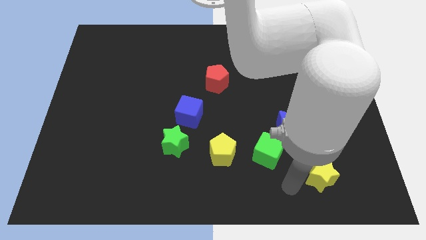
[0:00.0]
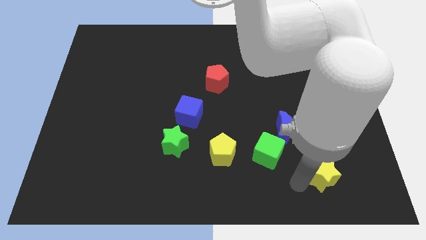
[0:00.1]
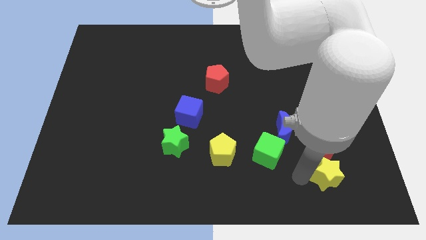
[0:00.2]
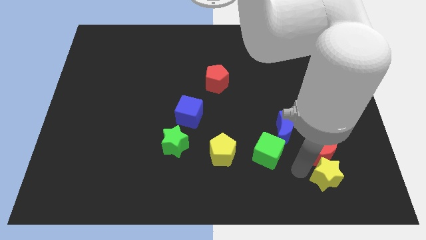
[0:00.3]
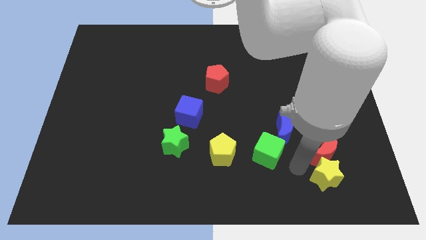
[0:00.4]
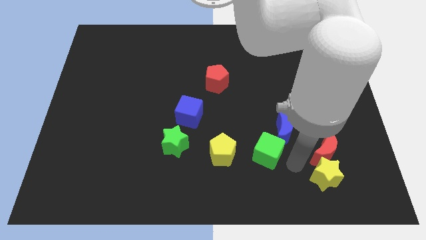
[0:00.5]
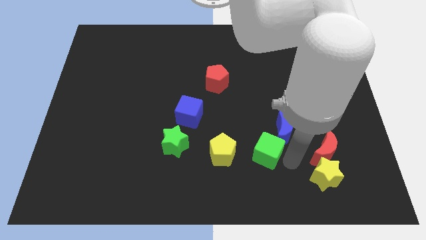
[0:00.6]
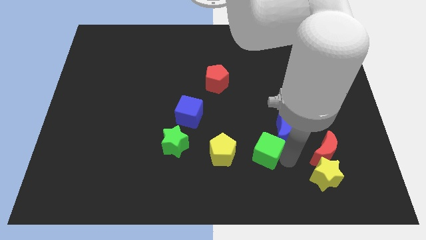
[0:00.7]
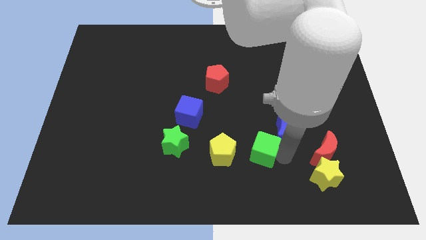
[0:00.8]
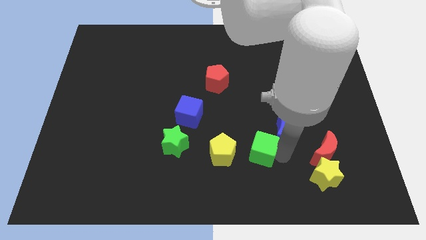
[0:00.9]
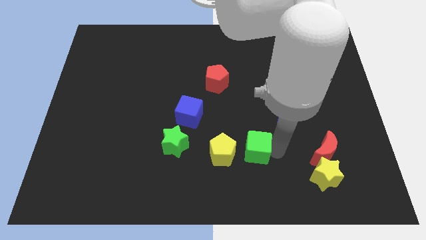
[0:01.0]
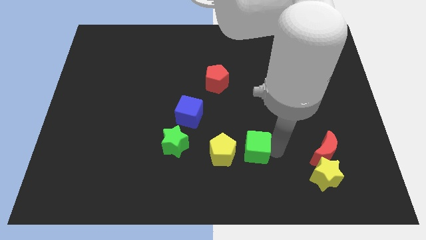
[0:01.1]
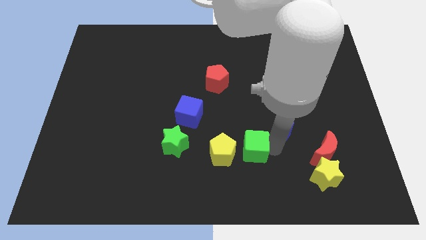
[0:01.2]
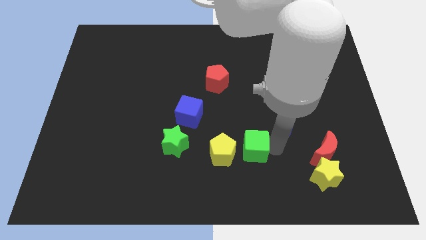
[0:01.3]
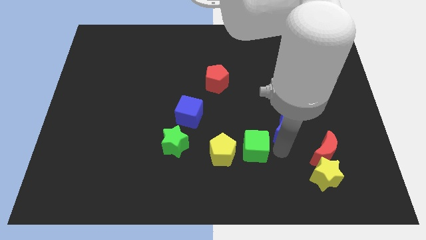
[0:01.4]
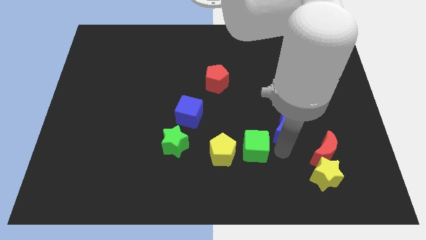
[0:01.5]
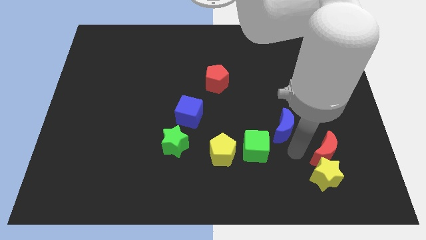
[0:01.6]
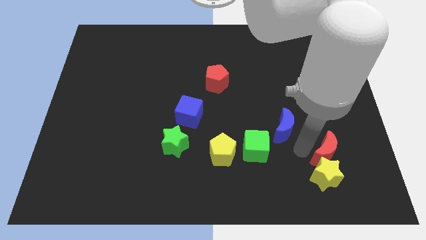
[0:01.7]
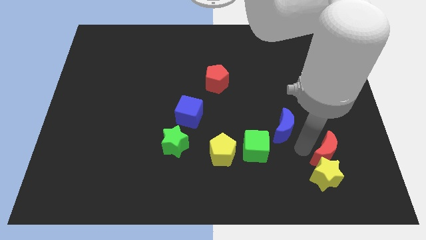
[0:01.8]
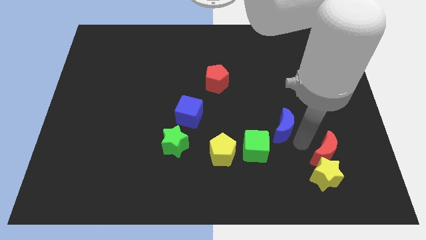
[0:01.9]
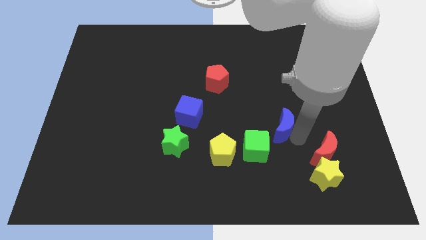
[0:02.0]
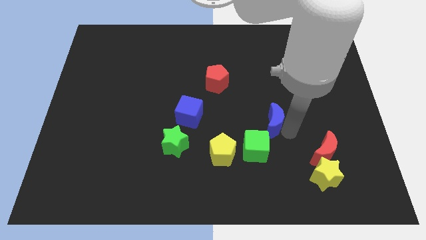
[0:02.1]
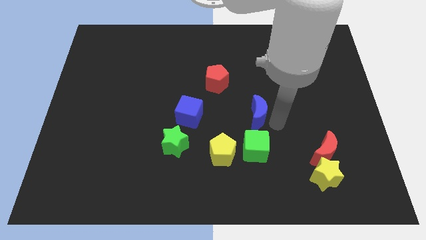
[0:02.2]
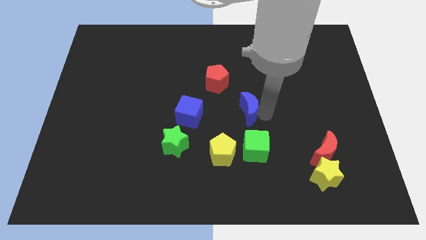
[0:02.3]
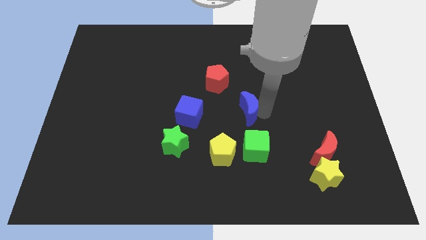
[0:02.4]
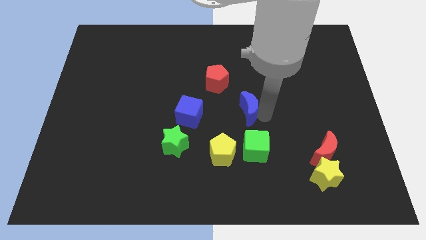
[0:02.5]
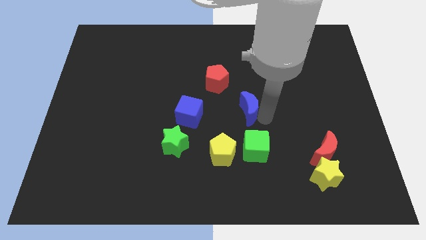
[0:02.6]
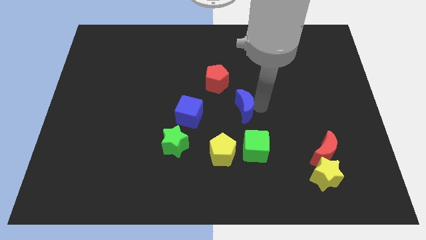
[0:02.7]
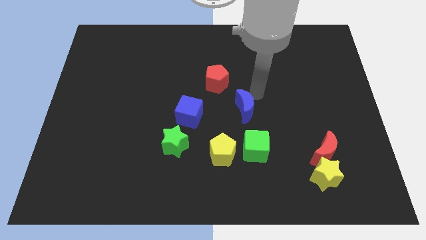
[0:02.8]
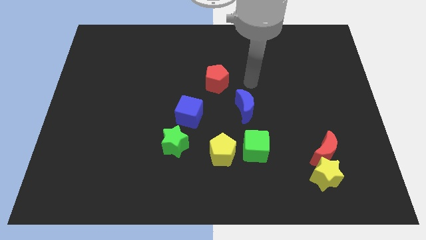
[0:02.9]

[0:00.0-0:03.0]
move the blue crescent towards the center of the board

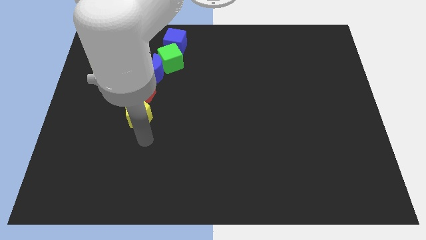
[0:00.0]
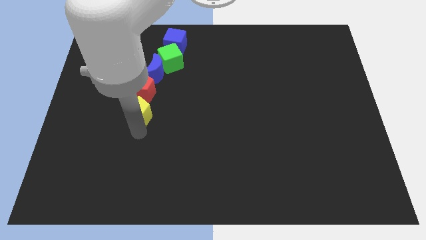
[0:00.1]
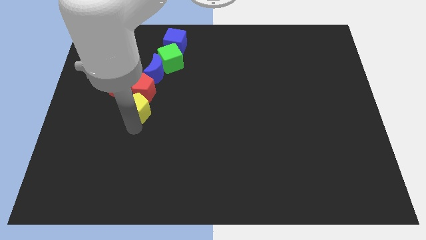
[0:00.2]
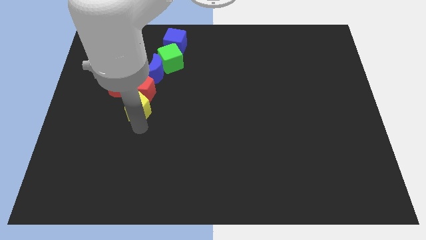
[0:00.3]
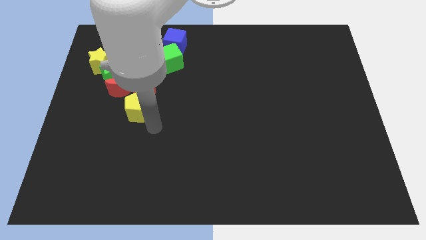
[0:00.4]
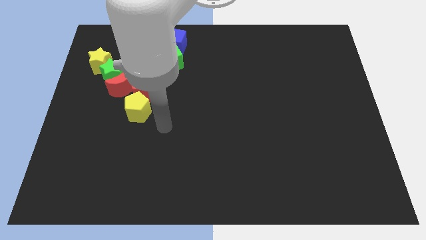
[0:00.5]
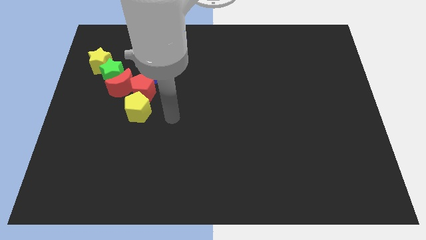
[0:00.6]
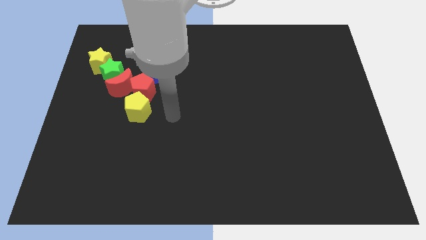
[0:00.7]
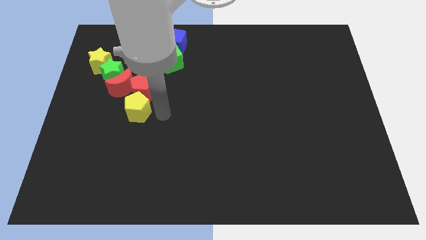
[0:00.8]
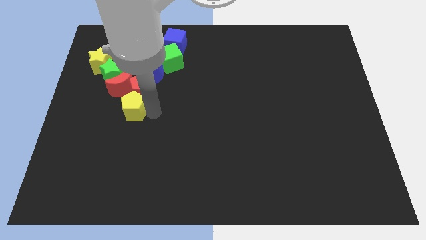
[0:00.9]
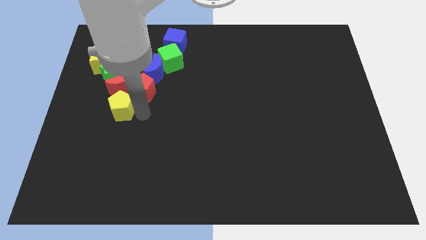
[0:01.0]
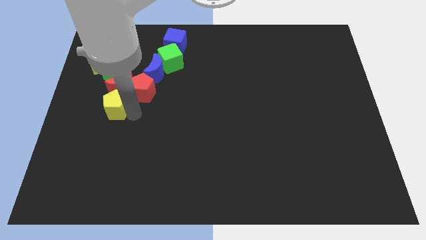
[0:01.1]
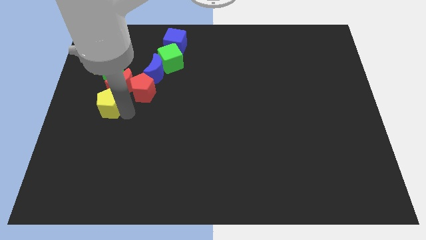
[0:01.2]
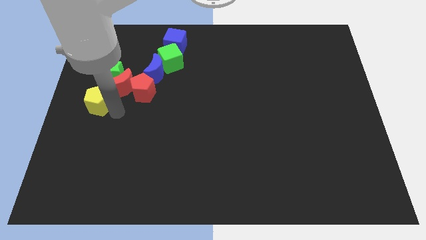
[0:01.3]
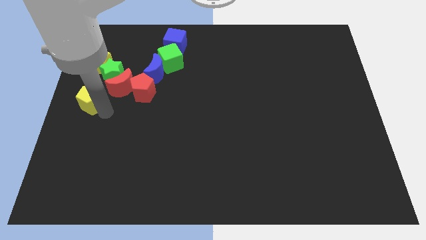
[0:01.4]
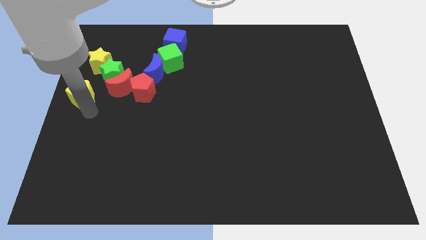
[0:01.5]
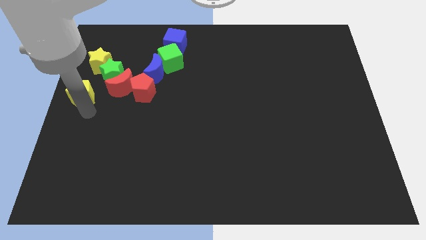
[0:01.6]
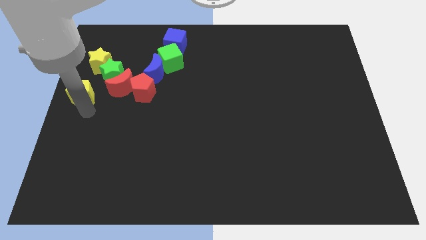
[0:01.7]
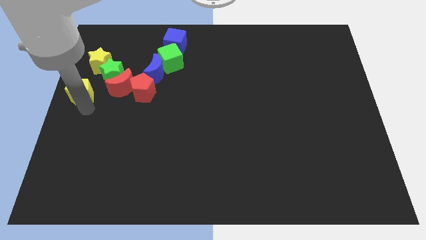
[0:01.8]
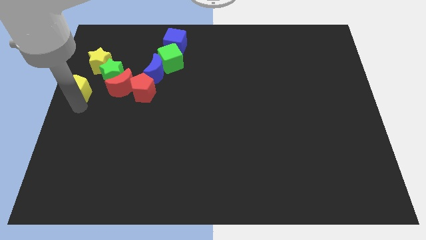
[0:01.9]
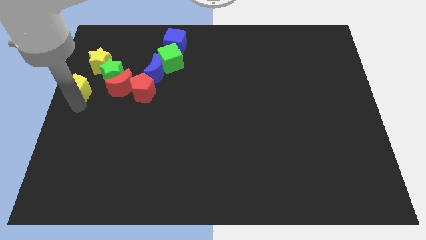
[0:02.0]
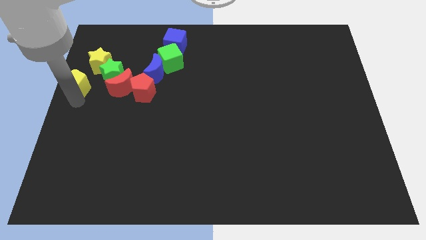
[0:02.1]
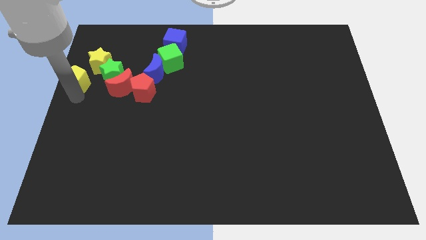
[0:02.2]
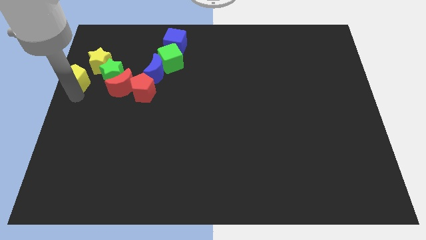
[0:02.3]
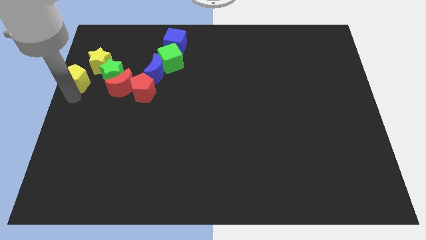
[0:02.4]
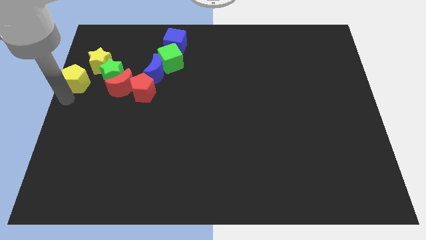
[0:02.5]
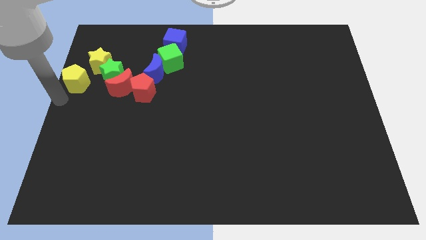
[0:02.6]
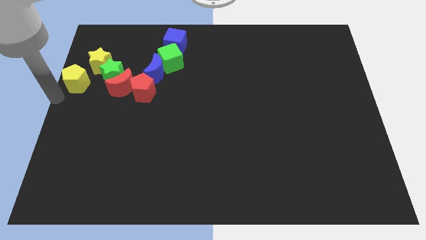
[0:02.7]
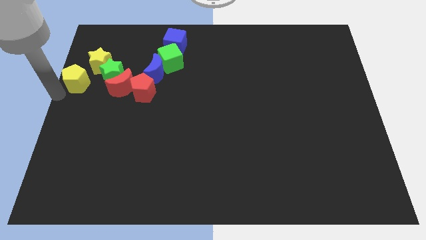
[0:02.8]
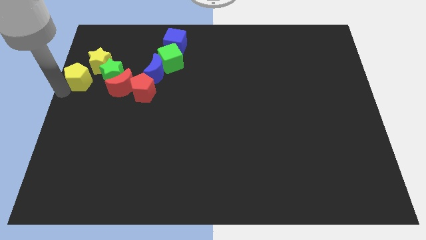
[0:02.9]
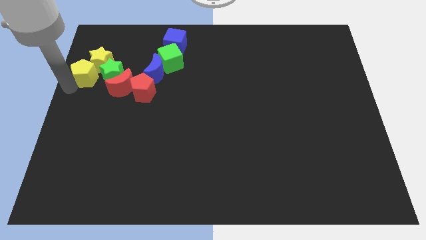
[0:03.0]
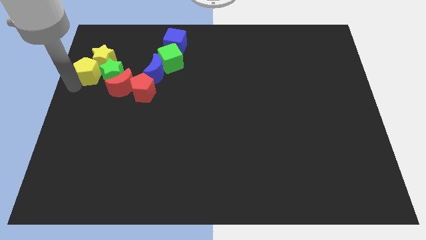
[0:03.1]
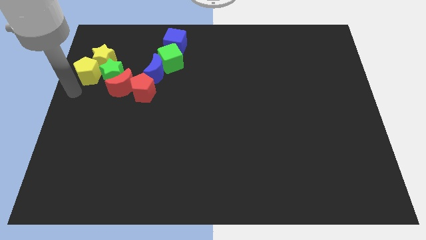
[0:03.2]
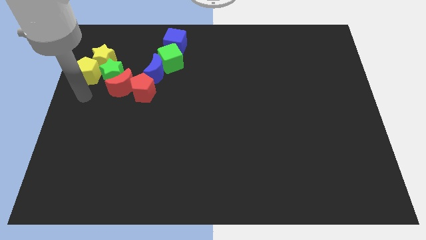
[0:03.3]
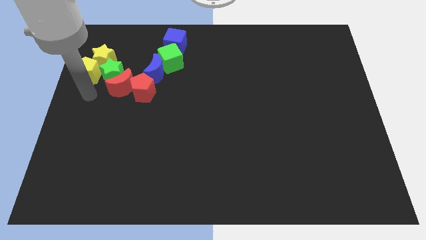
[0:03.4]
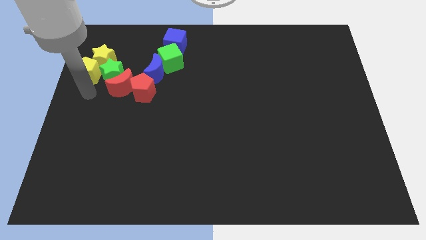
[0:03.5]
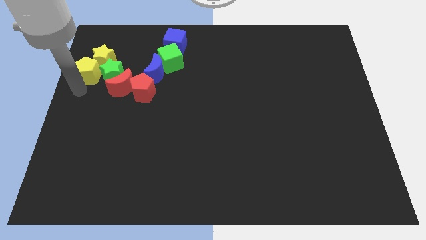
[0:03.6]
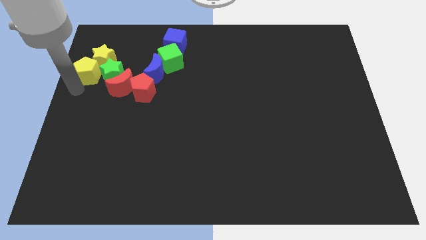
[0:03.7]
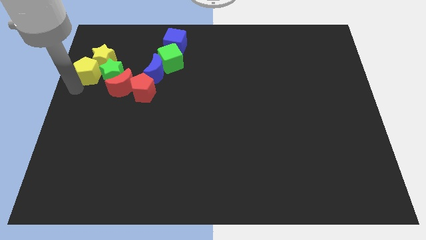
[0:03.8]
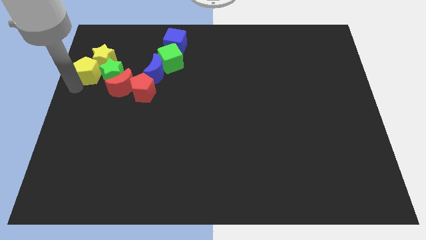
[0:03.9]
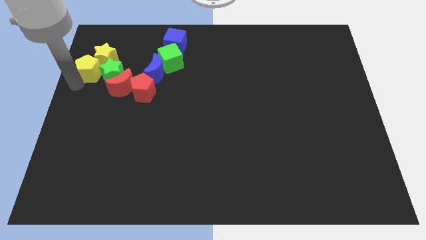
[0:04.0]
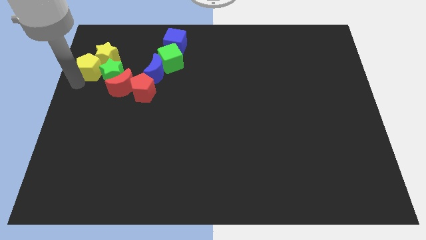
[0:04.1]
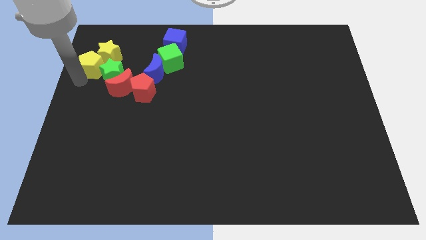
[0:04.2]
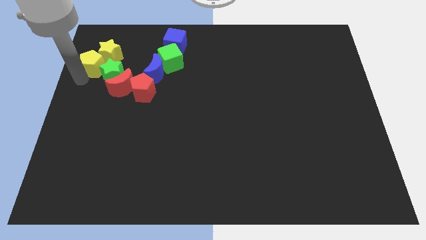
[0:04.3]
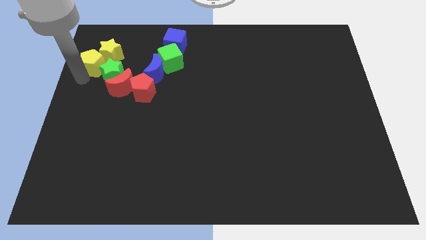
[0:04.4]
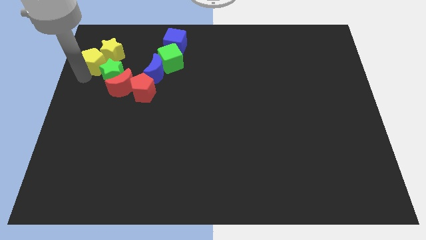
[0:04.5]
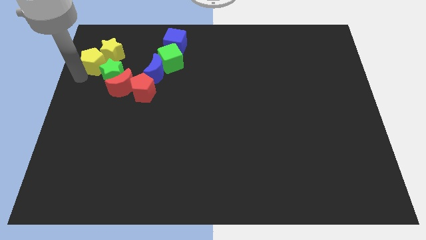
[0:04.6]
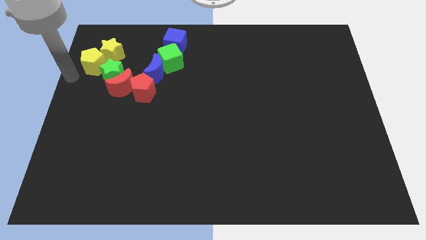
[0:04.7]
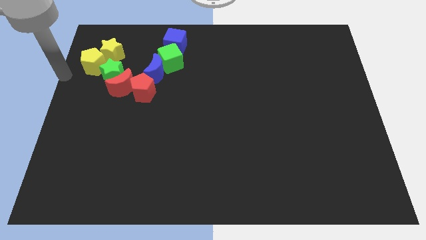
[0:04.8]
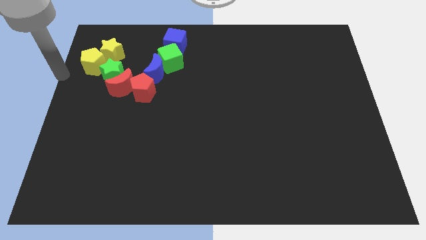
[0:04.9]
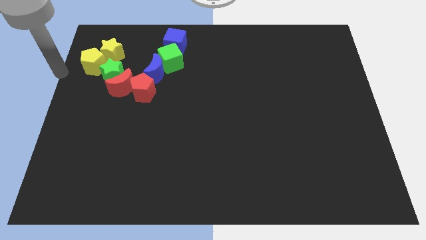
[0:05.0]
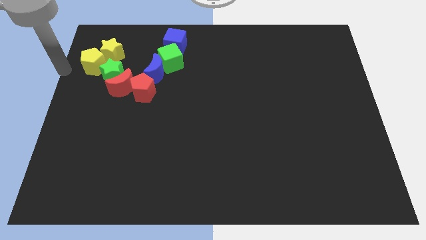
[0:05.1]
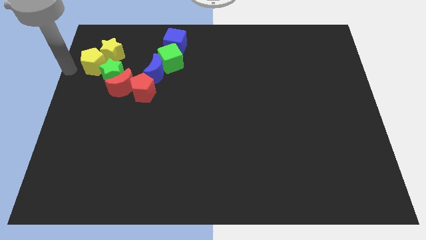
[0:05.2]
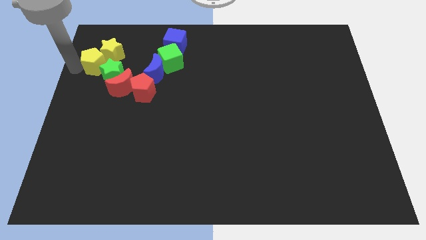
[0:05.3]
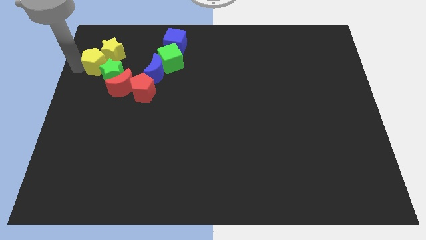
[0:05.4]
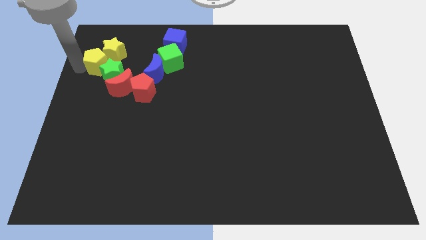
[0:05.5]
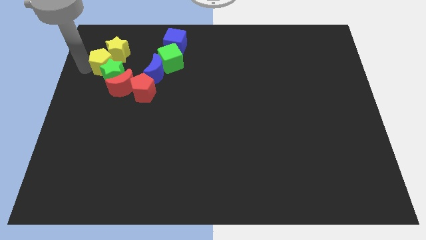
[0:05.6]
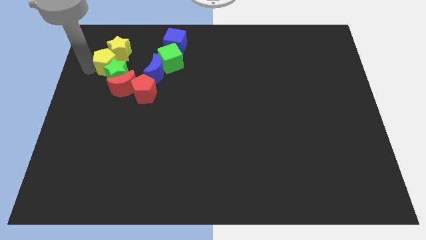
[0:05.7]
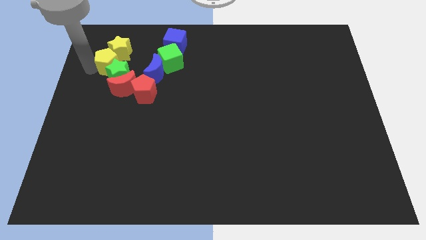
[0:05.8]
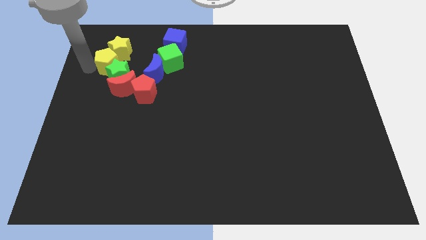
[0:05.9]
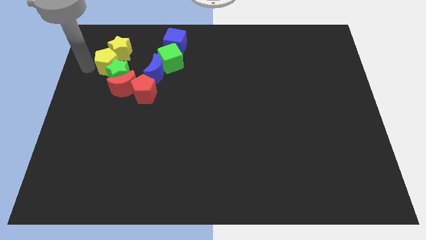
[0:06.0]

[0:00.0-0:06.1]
add yellow pentagon into yellow star
